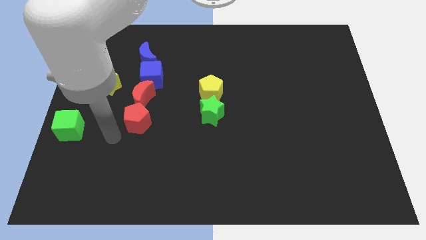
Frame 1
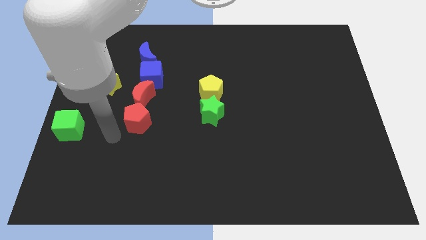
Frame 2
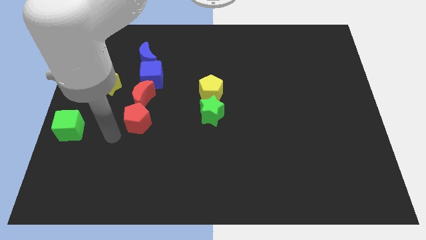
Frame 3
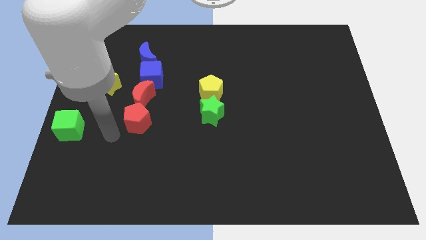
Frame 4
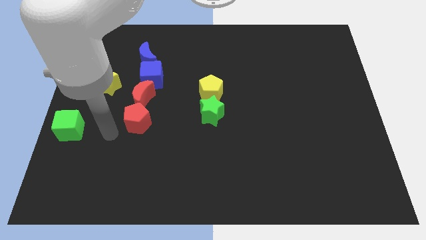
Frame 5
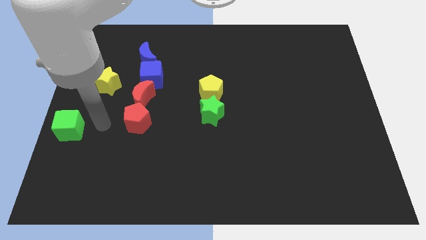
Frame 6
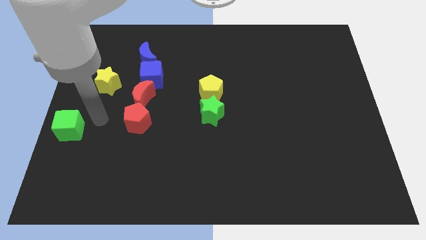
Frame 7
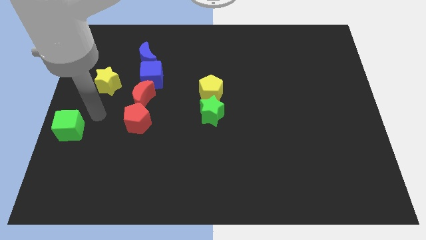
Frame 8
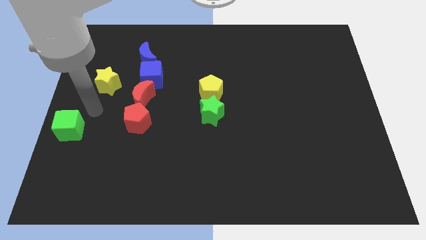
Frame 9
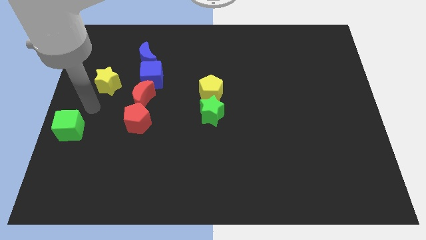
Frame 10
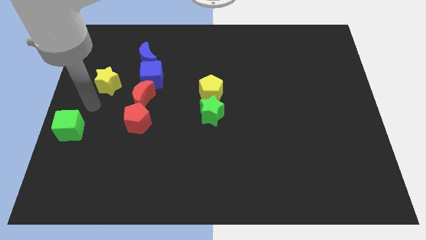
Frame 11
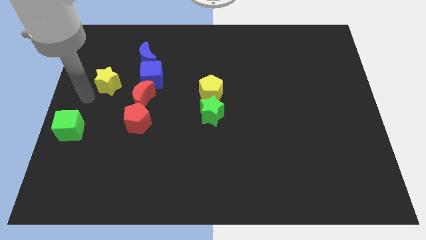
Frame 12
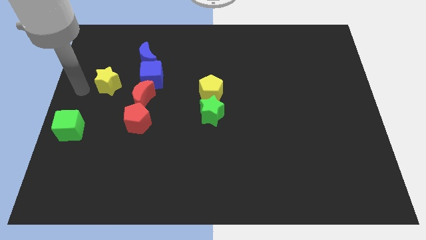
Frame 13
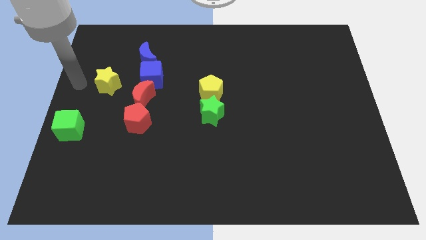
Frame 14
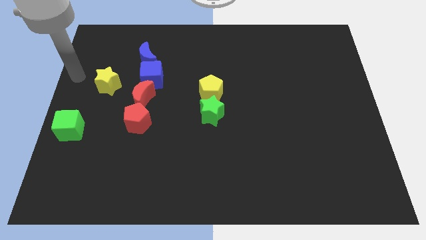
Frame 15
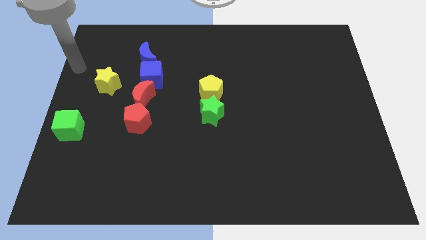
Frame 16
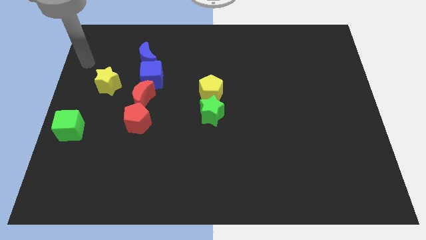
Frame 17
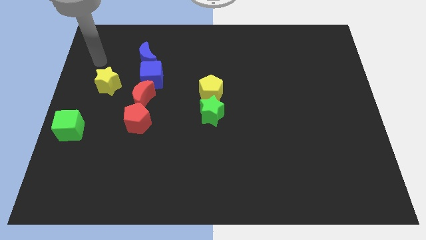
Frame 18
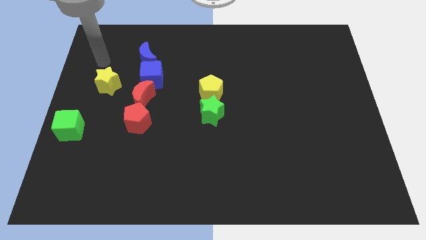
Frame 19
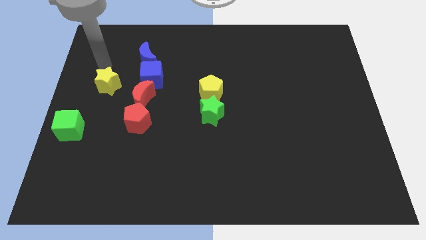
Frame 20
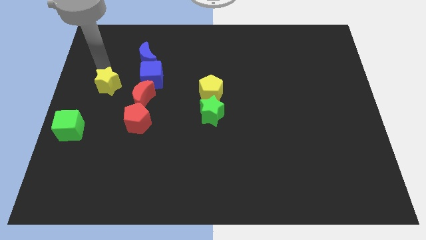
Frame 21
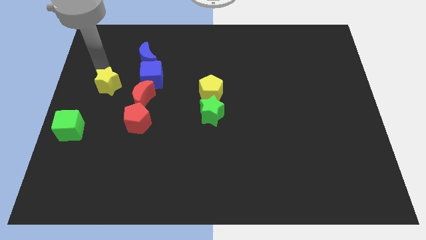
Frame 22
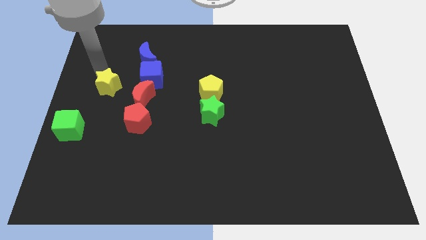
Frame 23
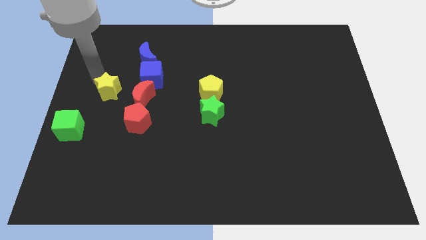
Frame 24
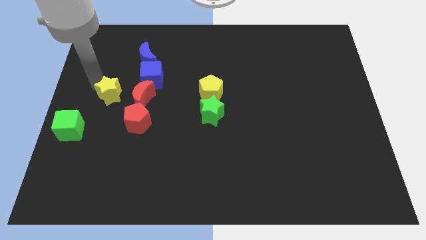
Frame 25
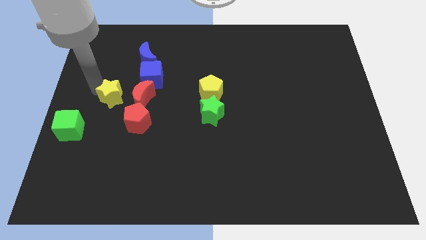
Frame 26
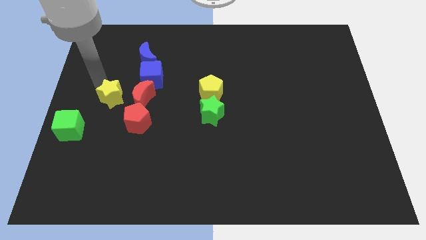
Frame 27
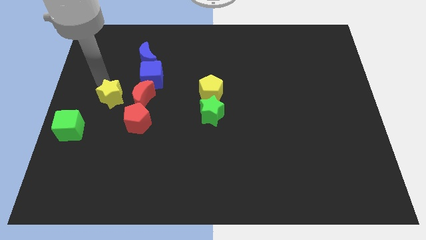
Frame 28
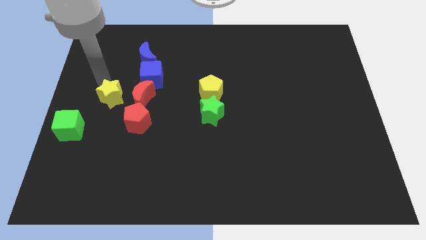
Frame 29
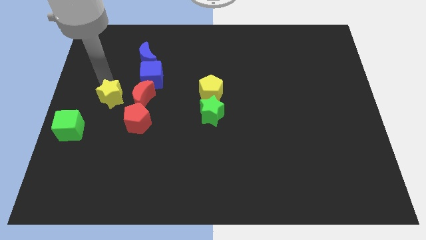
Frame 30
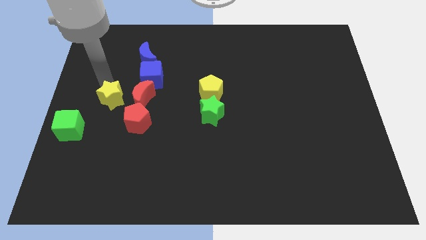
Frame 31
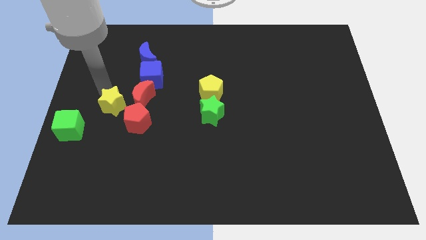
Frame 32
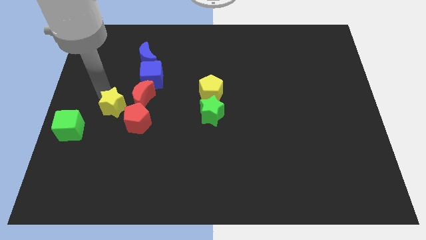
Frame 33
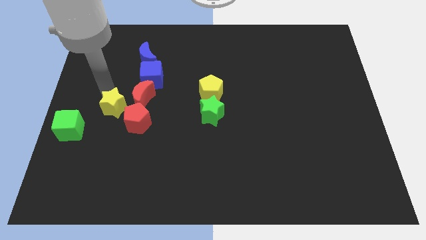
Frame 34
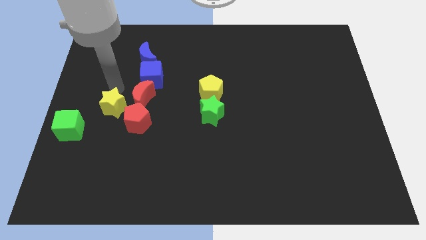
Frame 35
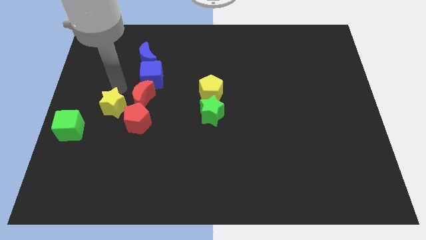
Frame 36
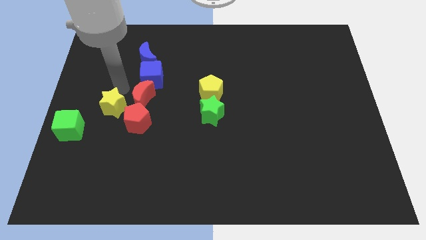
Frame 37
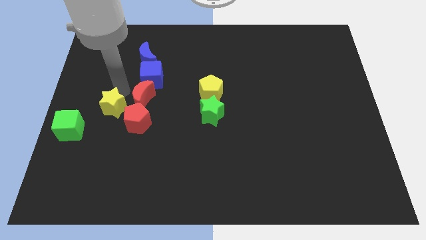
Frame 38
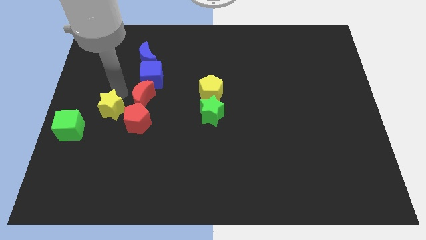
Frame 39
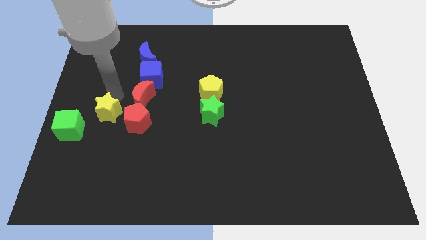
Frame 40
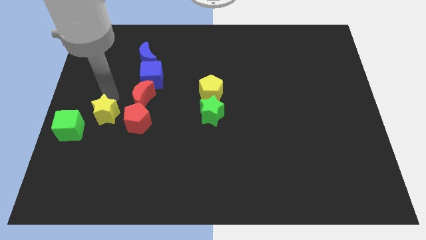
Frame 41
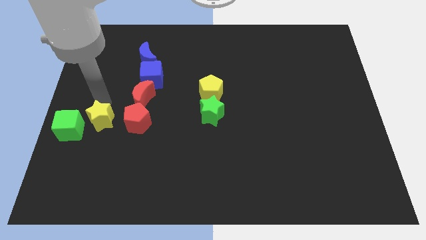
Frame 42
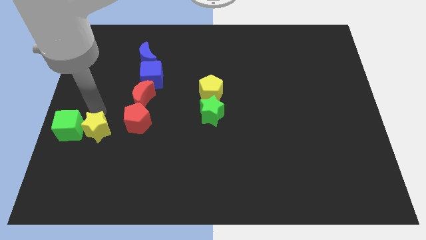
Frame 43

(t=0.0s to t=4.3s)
place the yellow star to the right of the green cube

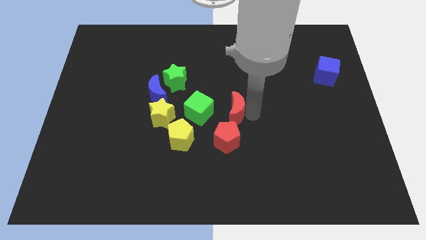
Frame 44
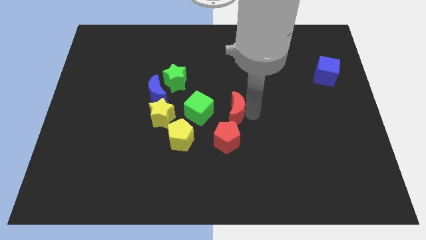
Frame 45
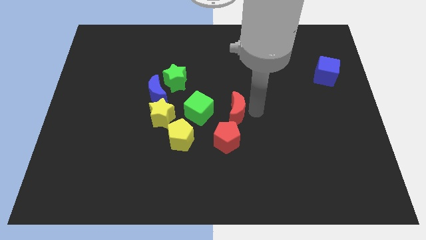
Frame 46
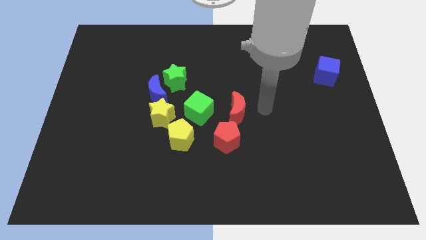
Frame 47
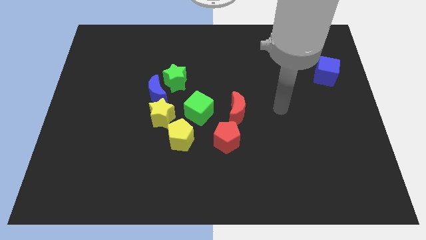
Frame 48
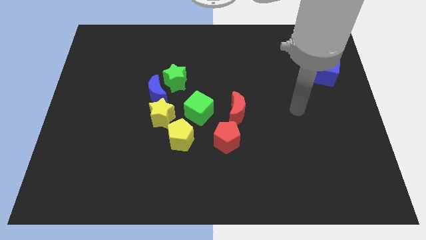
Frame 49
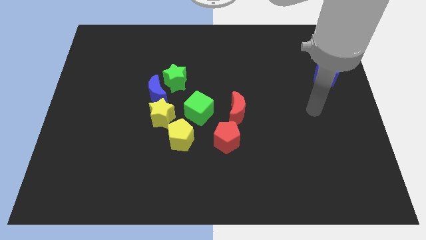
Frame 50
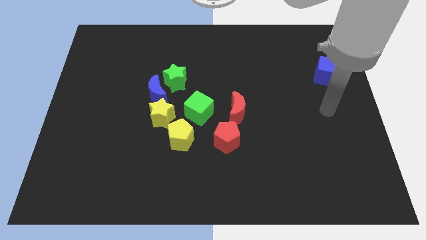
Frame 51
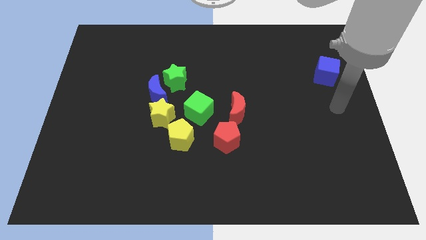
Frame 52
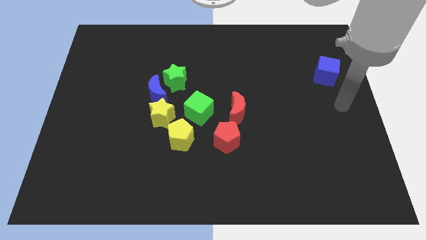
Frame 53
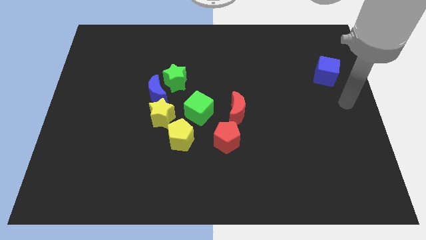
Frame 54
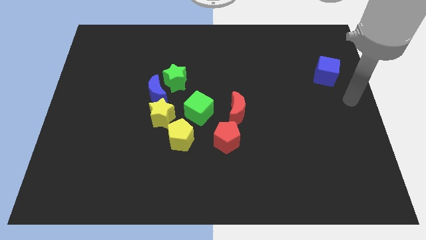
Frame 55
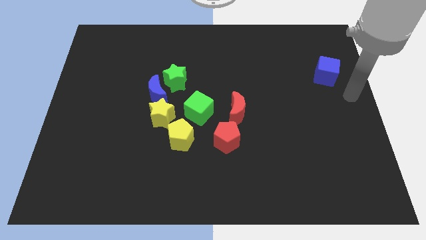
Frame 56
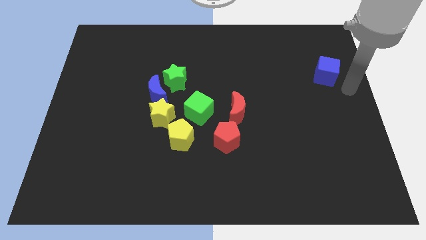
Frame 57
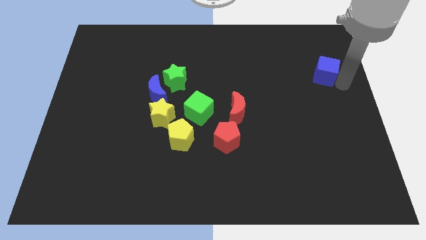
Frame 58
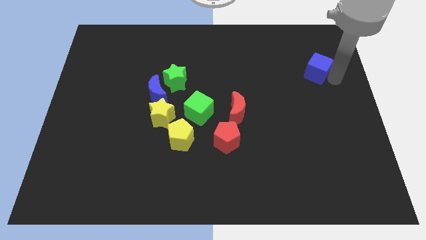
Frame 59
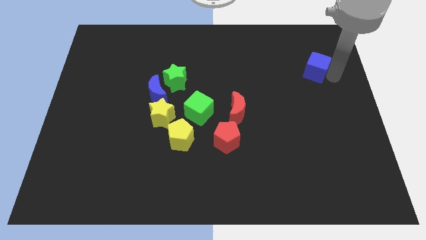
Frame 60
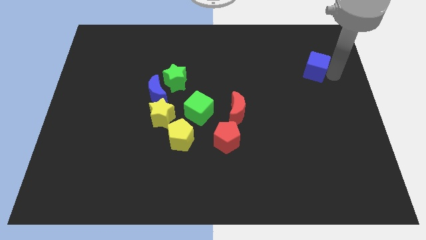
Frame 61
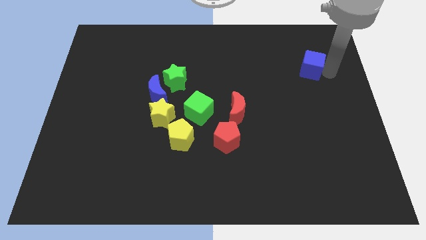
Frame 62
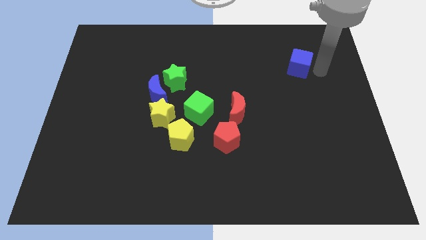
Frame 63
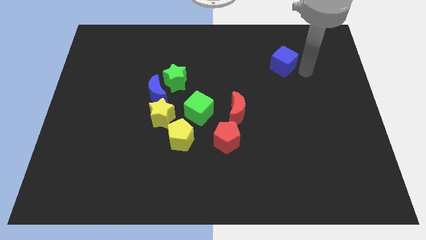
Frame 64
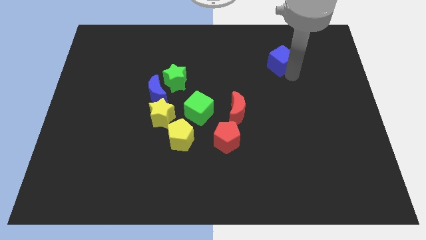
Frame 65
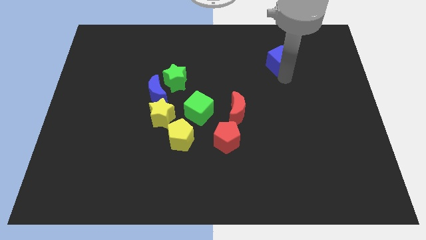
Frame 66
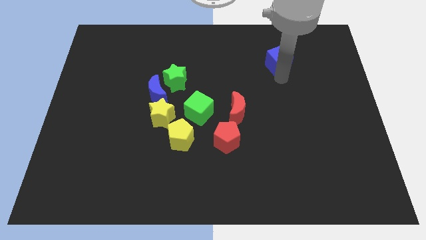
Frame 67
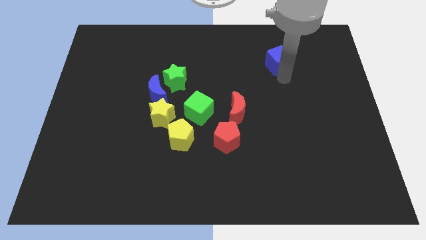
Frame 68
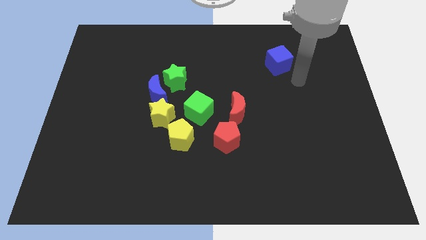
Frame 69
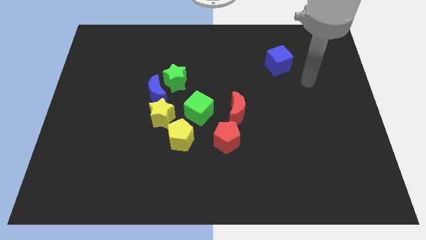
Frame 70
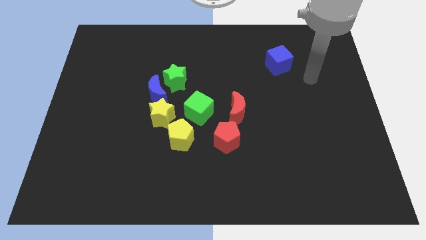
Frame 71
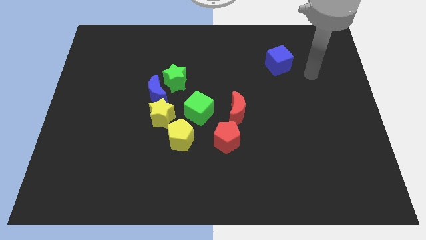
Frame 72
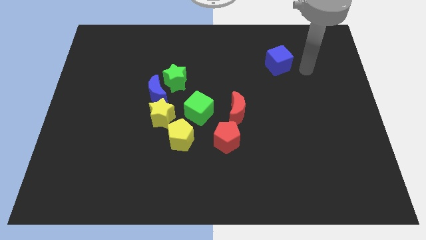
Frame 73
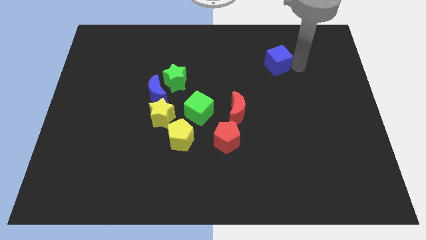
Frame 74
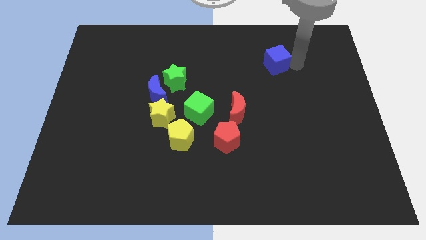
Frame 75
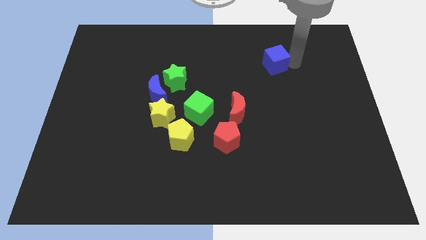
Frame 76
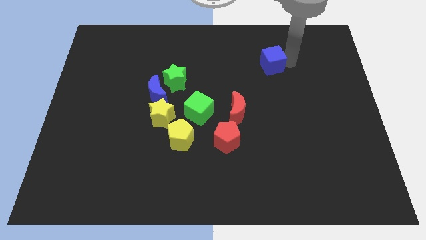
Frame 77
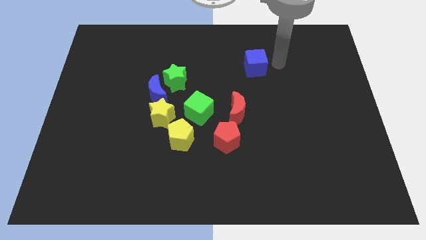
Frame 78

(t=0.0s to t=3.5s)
push the blue cube towards the top center

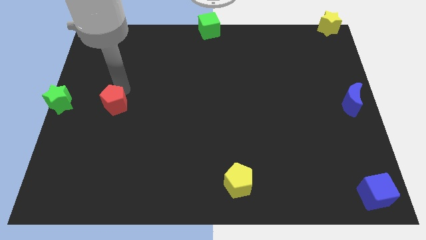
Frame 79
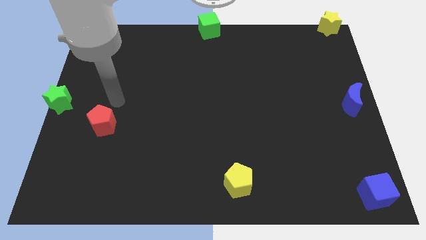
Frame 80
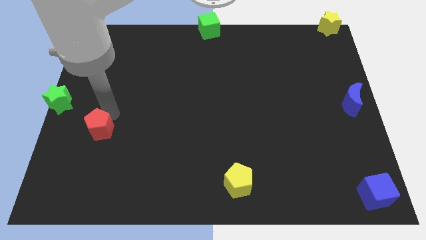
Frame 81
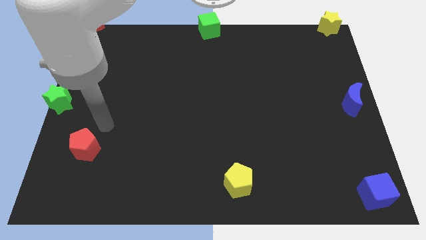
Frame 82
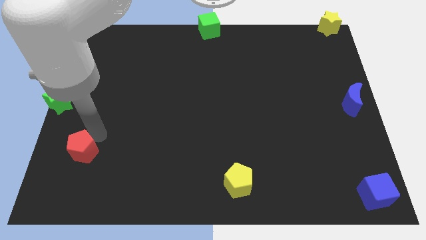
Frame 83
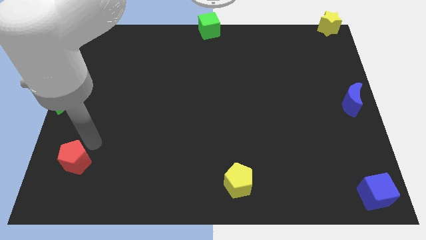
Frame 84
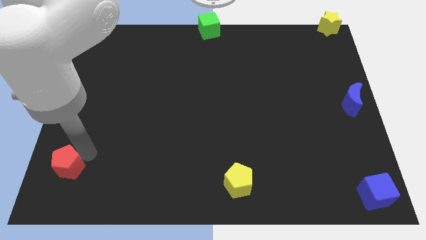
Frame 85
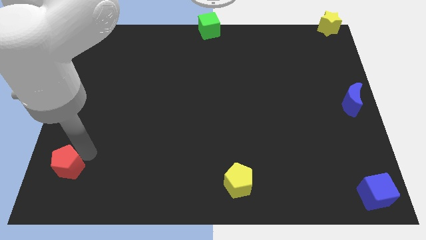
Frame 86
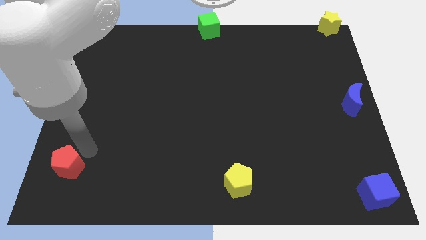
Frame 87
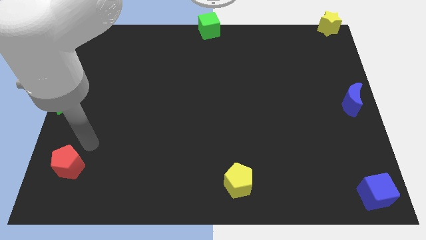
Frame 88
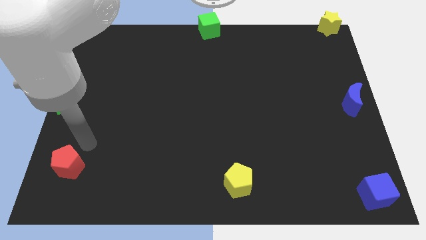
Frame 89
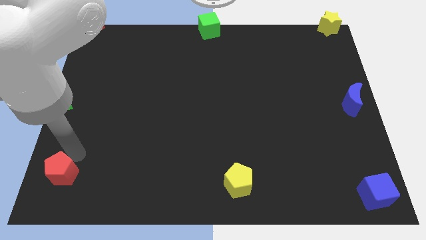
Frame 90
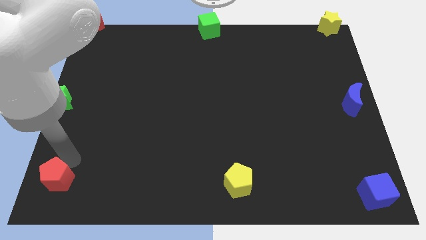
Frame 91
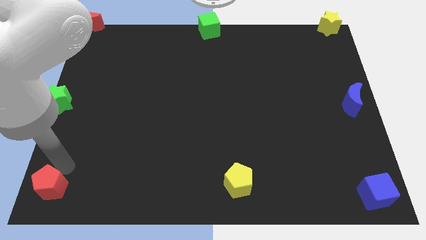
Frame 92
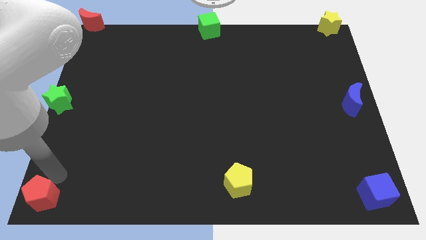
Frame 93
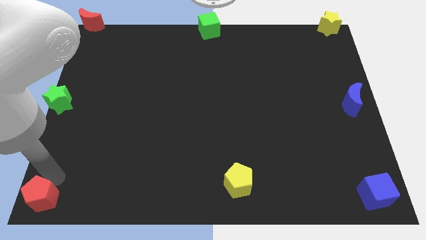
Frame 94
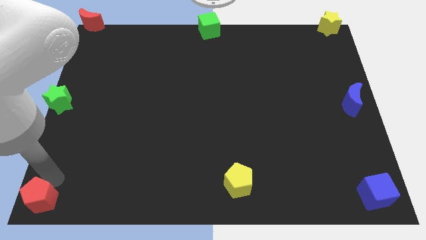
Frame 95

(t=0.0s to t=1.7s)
push the red pentagon to the bottom left to the board
